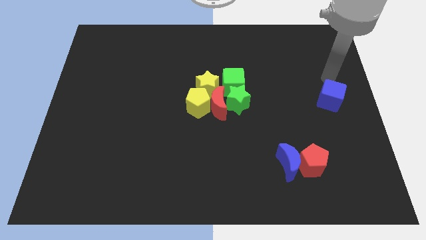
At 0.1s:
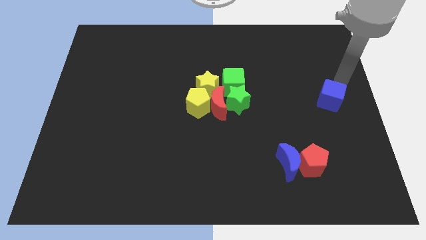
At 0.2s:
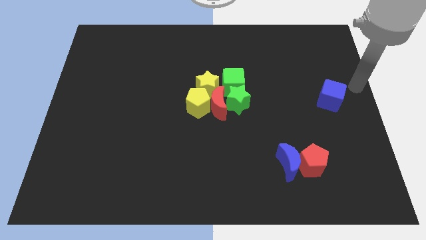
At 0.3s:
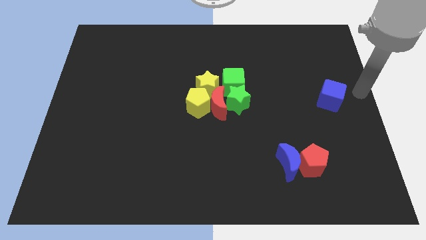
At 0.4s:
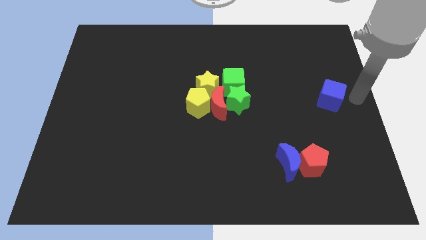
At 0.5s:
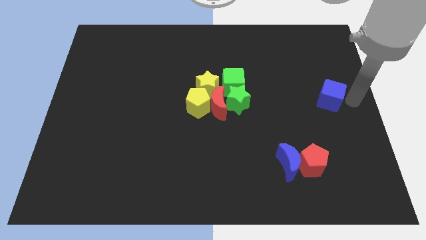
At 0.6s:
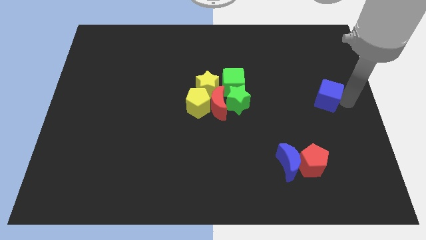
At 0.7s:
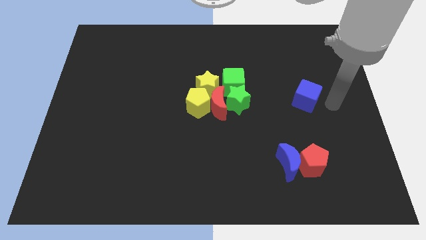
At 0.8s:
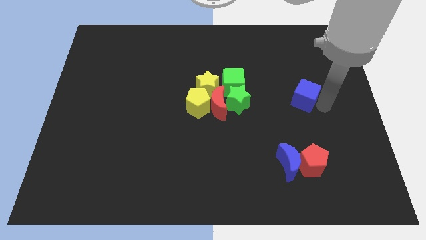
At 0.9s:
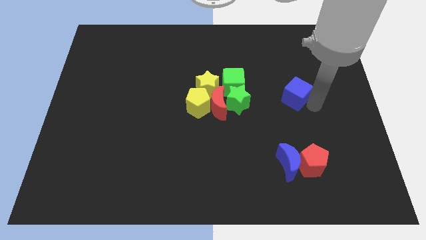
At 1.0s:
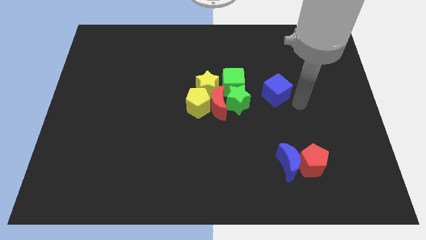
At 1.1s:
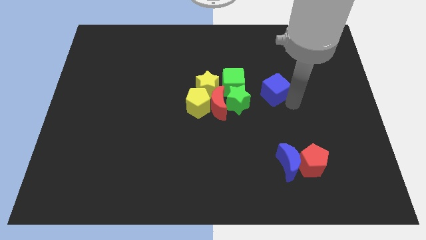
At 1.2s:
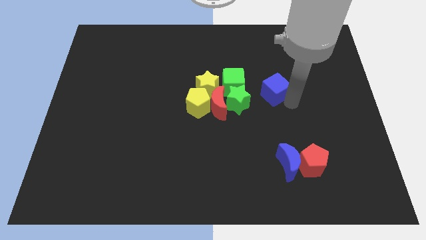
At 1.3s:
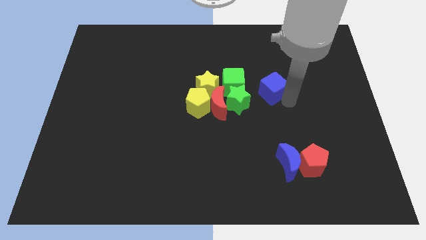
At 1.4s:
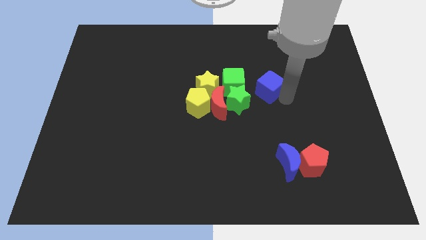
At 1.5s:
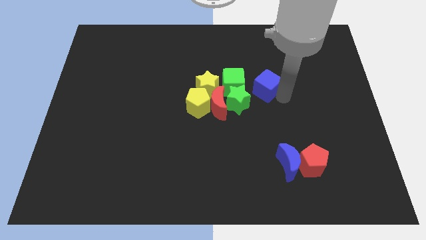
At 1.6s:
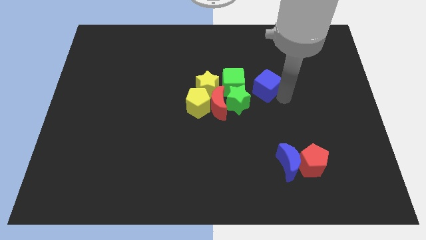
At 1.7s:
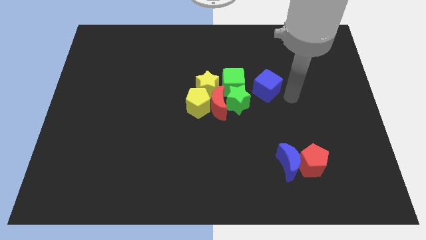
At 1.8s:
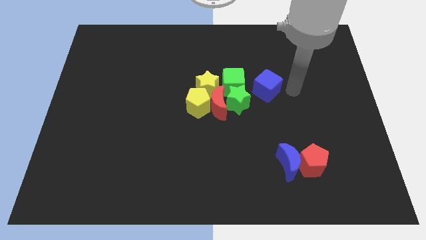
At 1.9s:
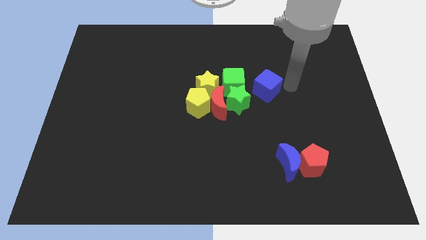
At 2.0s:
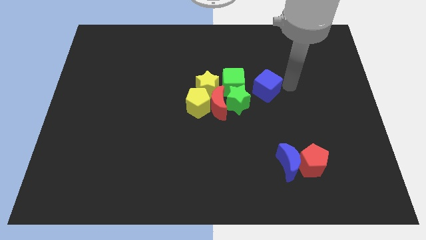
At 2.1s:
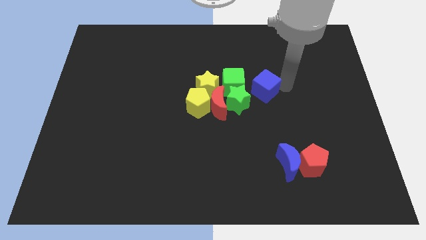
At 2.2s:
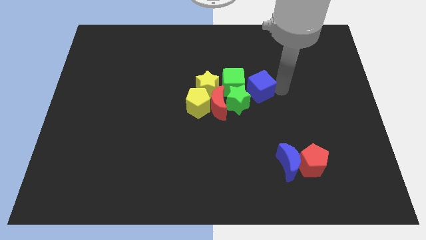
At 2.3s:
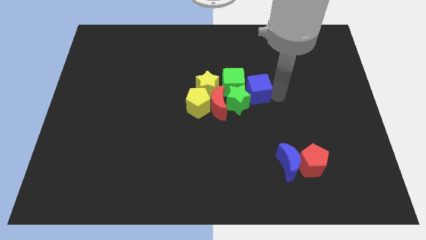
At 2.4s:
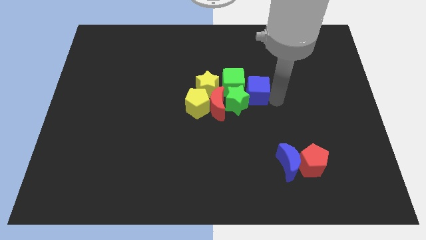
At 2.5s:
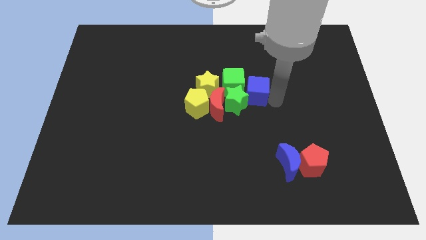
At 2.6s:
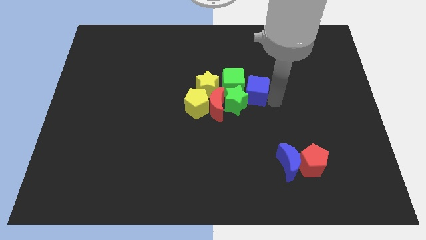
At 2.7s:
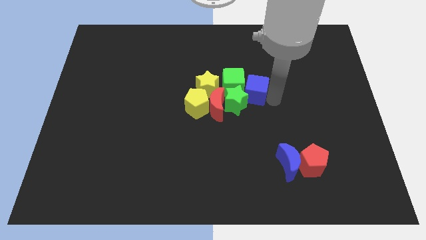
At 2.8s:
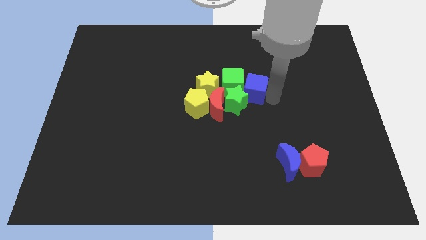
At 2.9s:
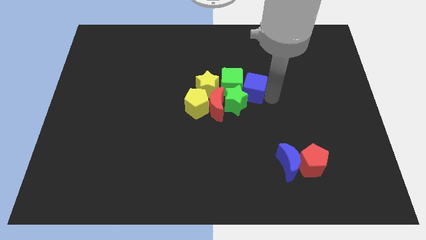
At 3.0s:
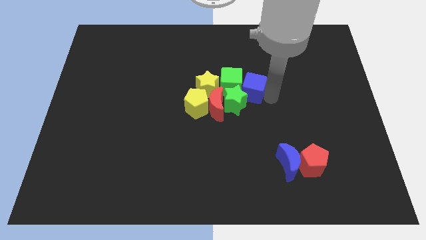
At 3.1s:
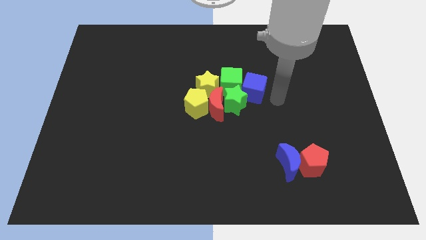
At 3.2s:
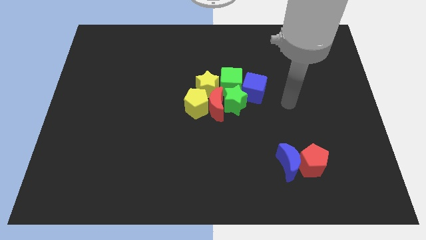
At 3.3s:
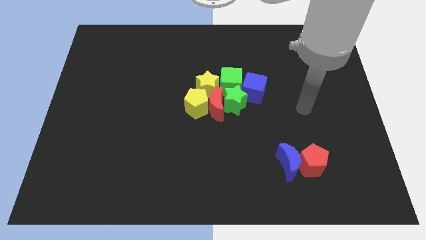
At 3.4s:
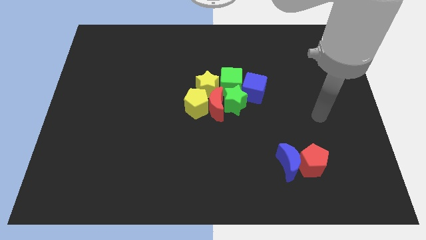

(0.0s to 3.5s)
place the blue cube into the green blocks

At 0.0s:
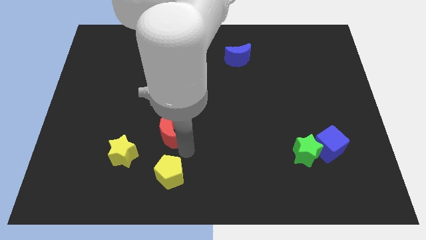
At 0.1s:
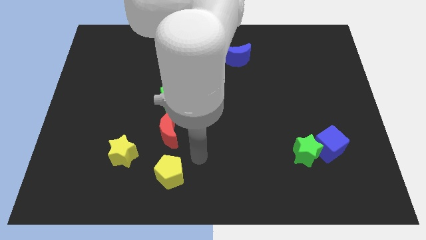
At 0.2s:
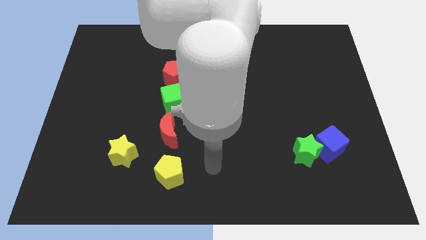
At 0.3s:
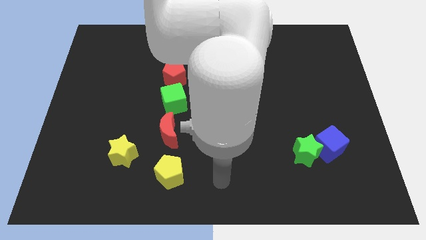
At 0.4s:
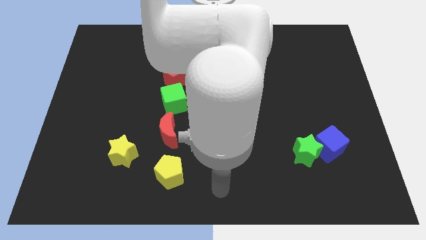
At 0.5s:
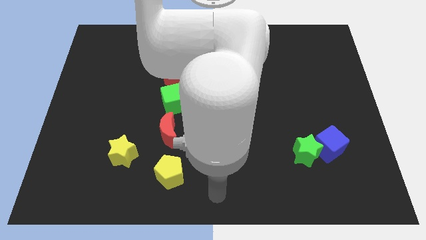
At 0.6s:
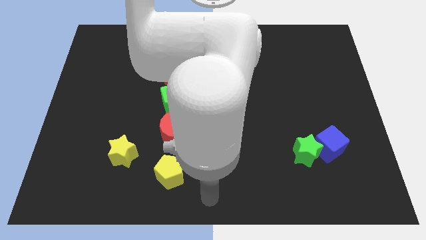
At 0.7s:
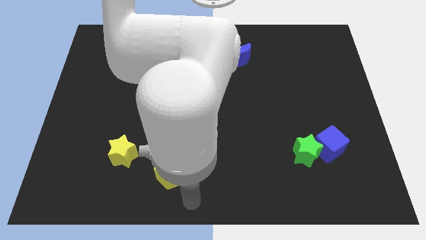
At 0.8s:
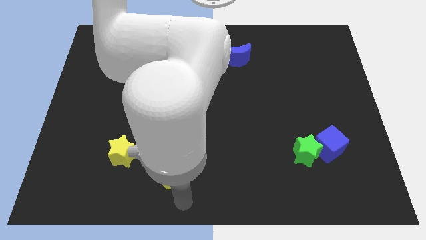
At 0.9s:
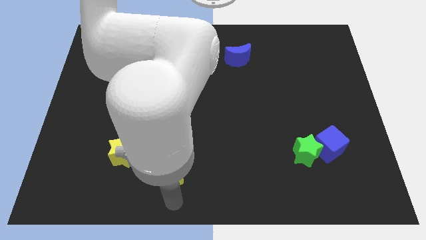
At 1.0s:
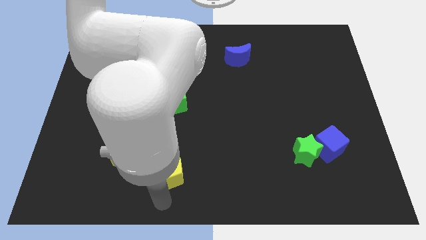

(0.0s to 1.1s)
push your arm below the yellow pentagon

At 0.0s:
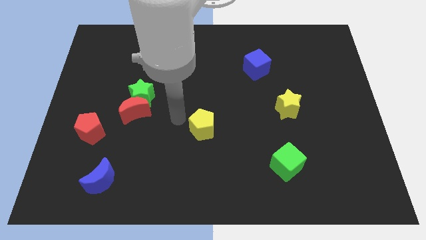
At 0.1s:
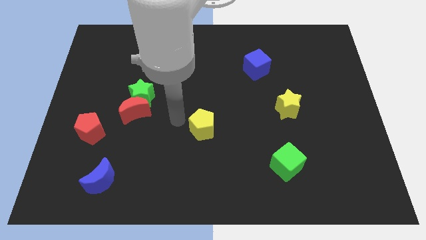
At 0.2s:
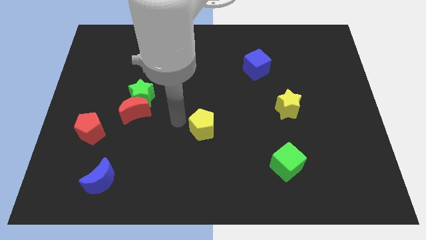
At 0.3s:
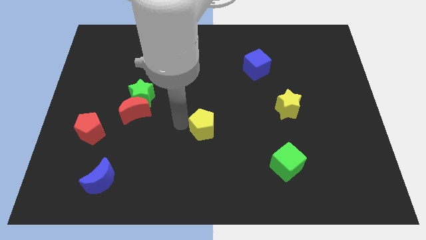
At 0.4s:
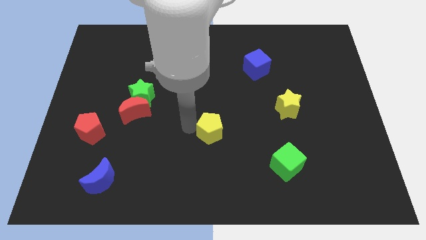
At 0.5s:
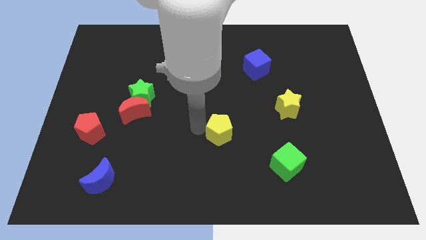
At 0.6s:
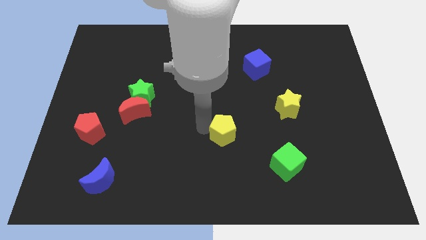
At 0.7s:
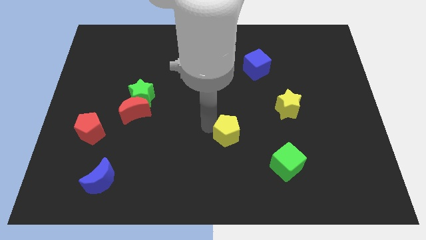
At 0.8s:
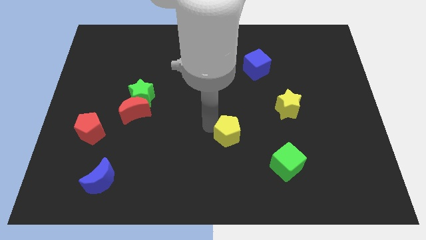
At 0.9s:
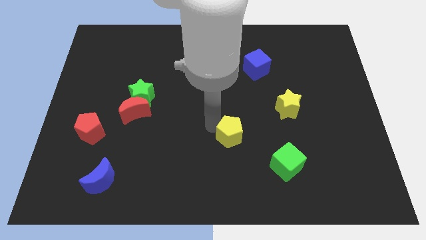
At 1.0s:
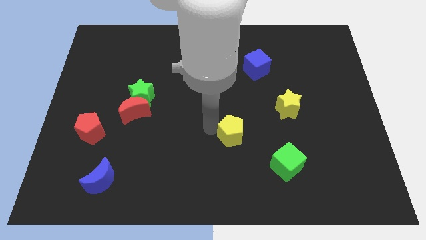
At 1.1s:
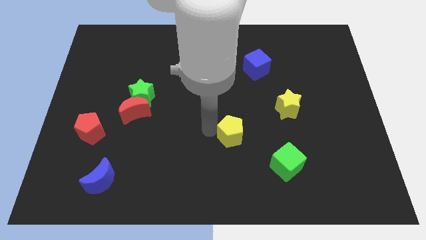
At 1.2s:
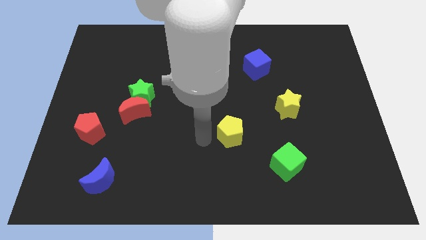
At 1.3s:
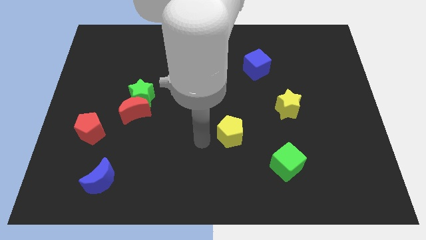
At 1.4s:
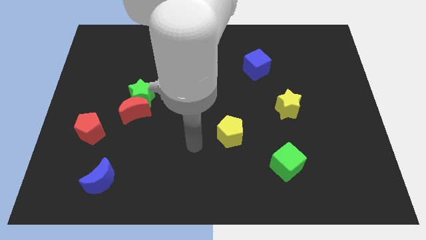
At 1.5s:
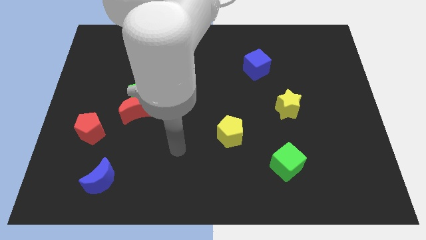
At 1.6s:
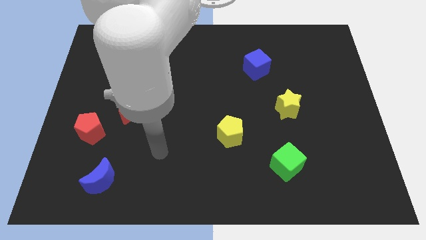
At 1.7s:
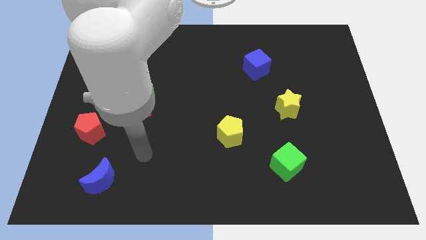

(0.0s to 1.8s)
push the yellow pentagon slightly to the right

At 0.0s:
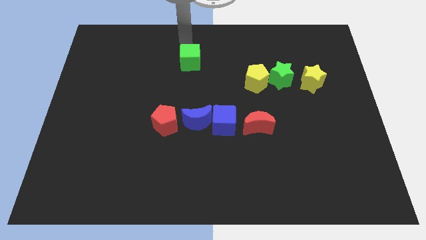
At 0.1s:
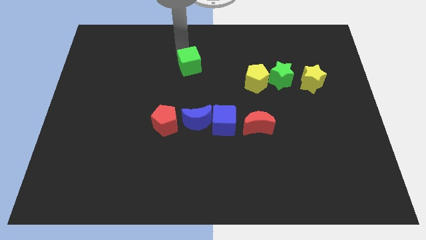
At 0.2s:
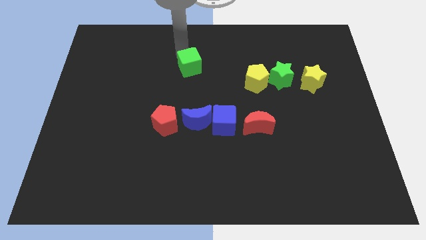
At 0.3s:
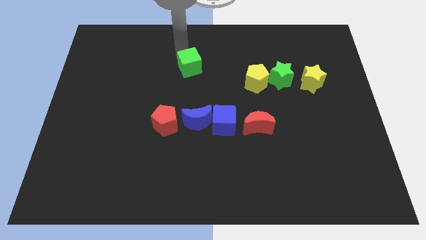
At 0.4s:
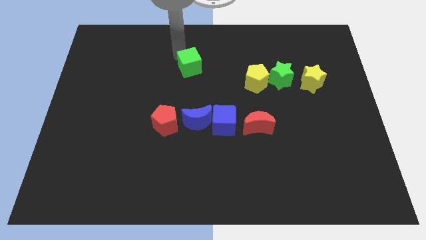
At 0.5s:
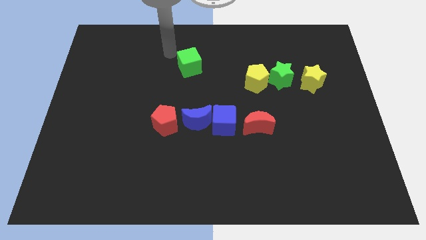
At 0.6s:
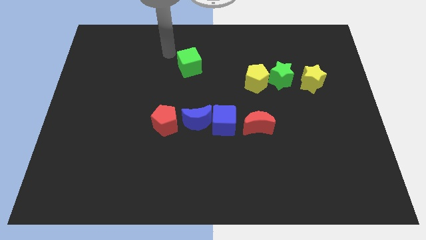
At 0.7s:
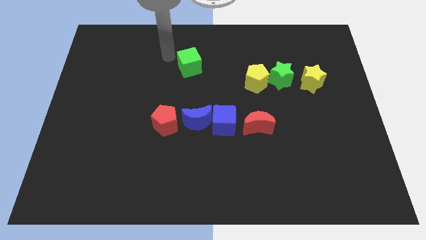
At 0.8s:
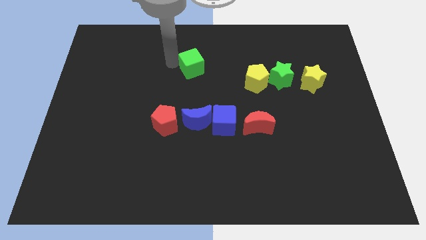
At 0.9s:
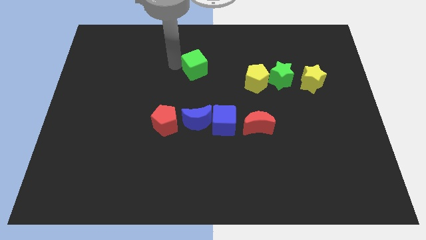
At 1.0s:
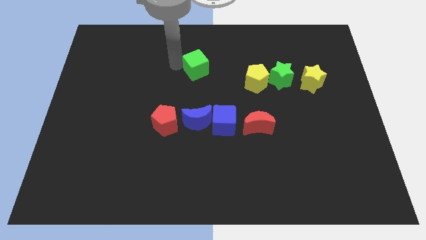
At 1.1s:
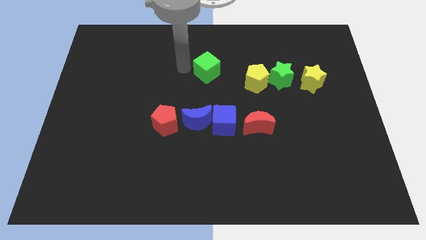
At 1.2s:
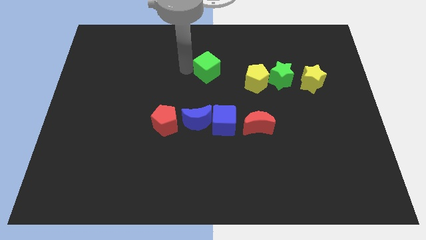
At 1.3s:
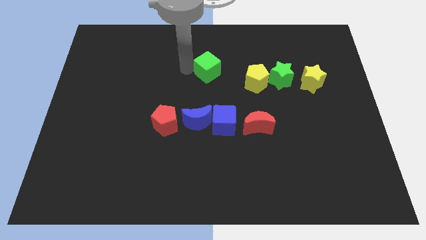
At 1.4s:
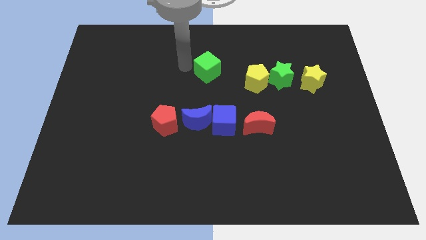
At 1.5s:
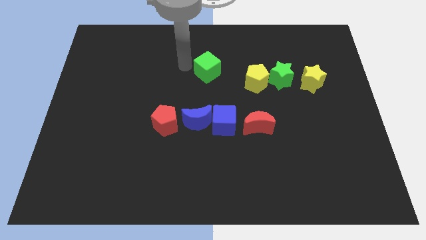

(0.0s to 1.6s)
move the green cube slightly to the left of the yellow pentagon

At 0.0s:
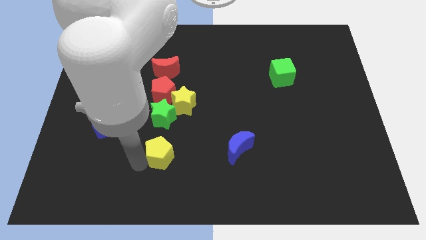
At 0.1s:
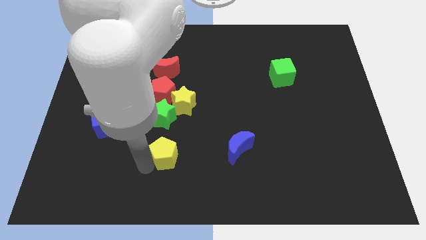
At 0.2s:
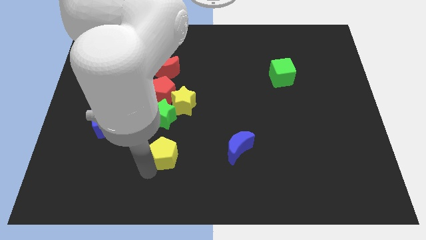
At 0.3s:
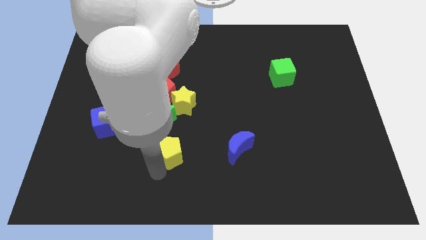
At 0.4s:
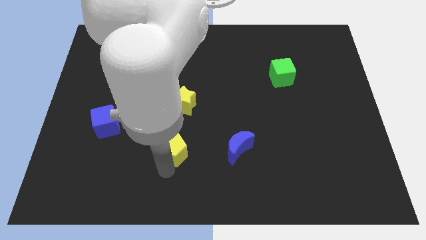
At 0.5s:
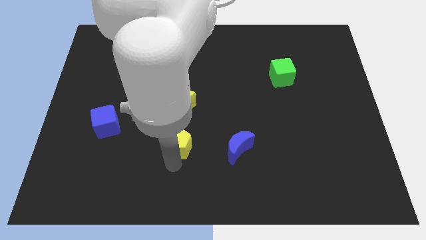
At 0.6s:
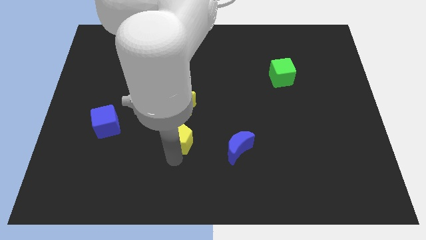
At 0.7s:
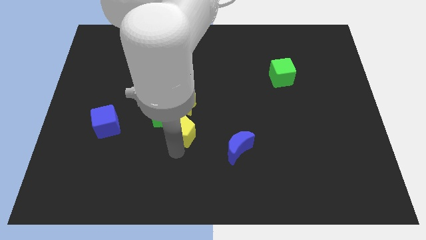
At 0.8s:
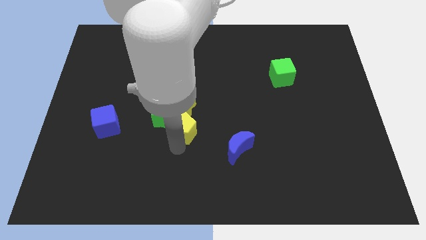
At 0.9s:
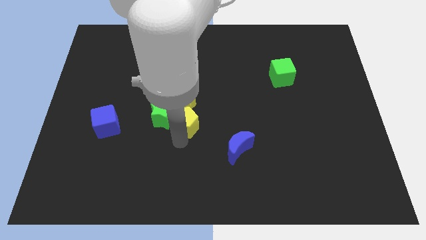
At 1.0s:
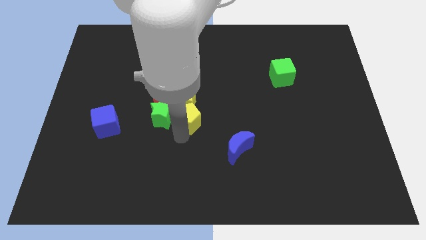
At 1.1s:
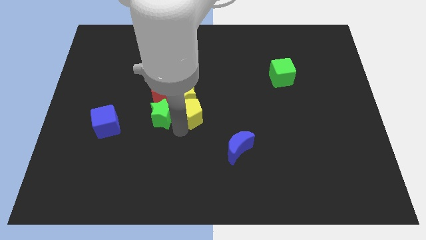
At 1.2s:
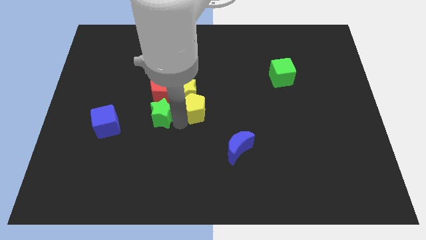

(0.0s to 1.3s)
put the yellow pentagon parallel right to the green star
